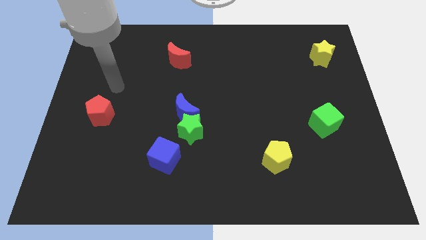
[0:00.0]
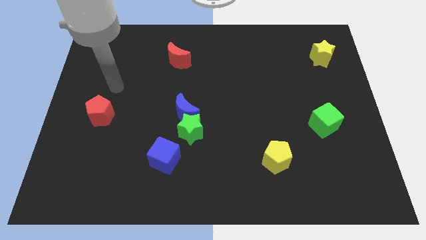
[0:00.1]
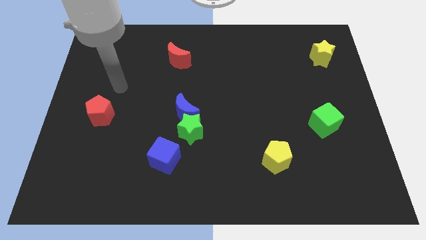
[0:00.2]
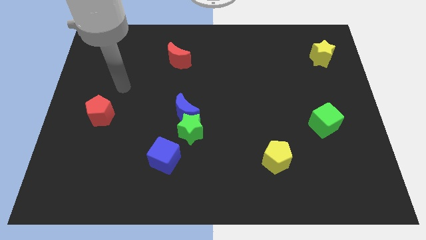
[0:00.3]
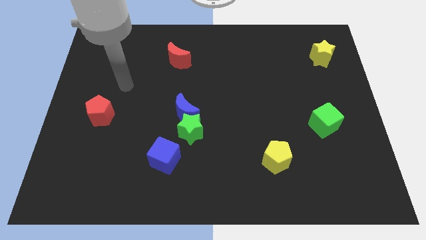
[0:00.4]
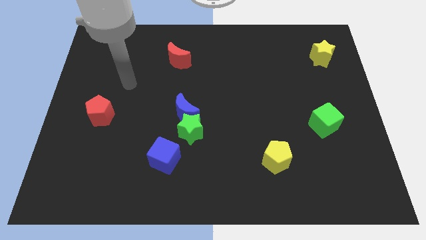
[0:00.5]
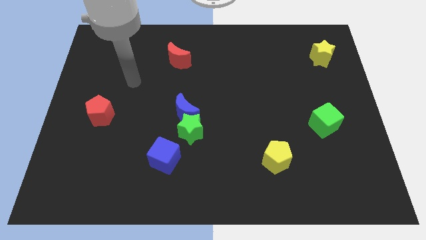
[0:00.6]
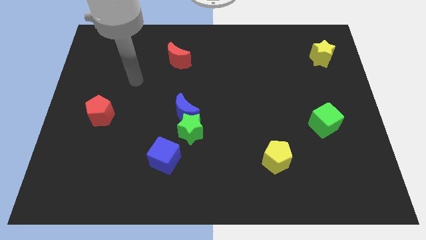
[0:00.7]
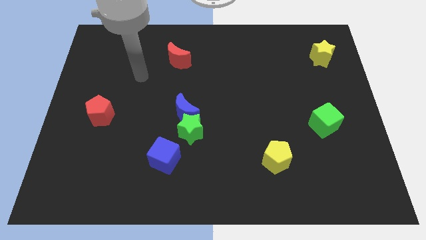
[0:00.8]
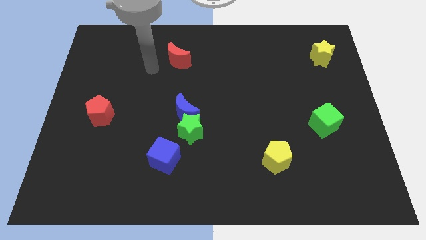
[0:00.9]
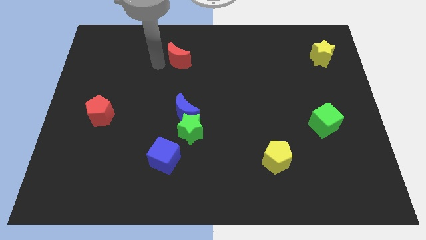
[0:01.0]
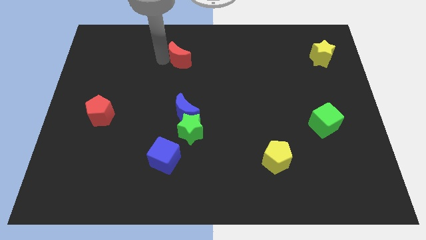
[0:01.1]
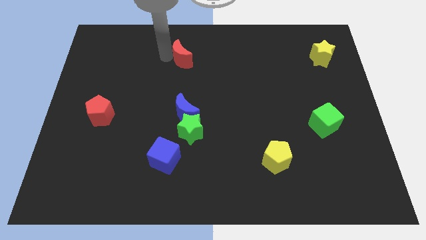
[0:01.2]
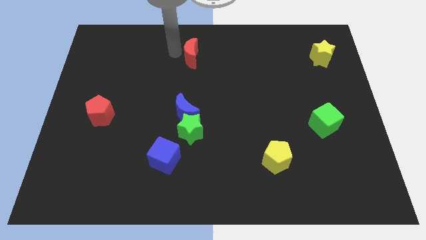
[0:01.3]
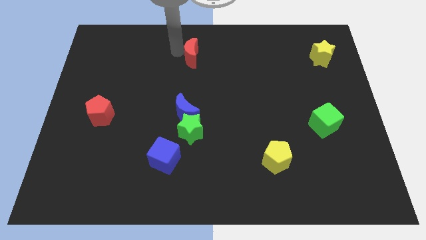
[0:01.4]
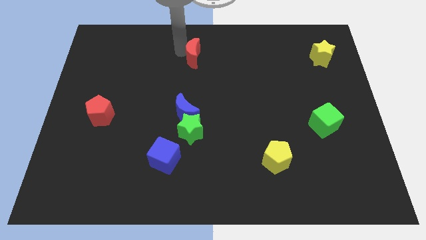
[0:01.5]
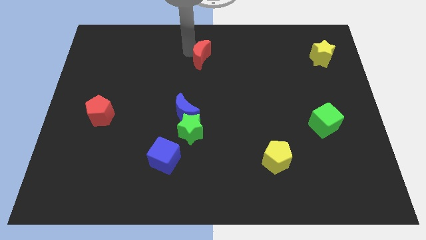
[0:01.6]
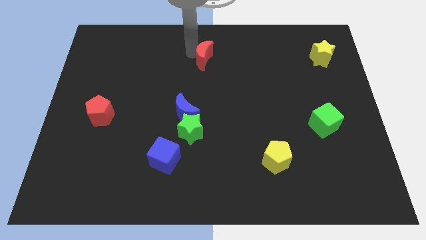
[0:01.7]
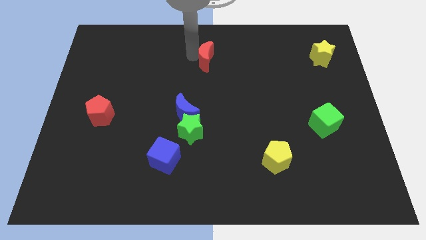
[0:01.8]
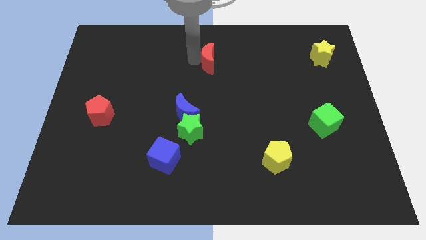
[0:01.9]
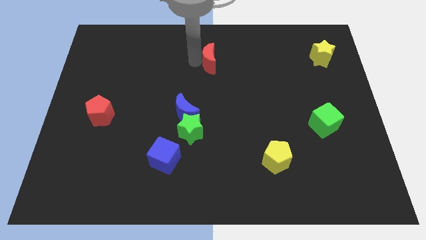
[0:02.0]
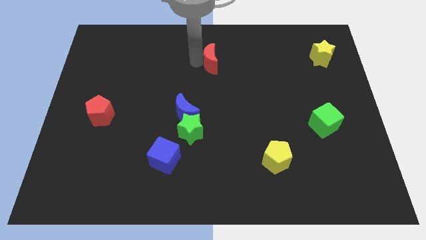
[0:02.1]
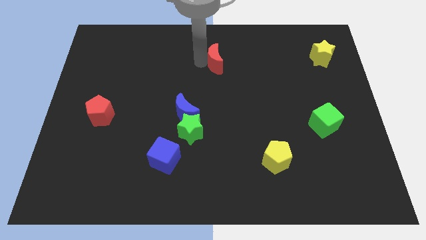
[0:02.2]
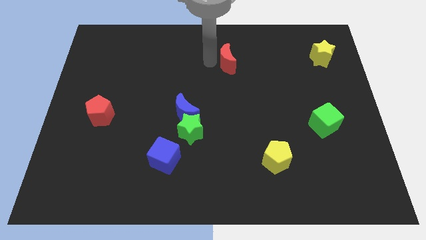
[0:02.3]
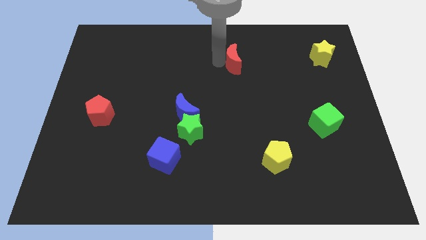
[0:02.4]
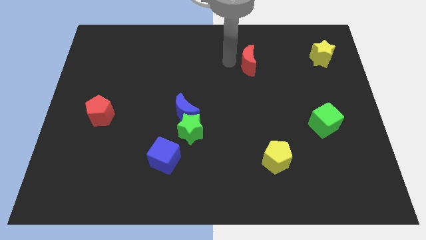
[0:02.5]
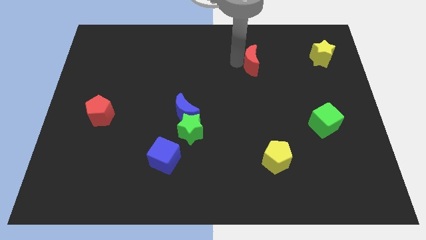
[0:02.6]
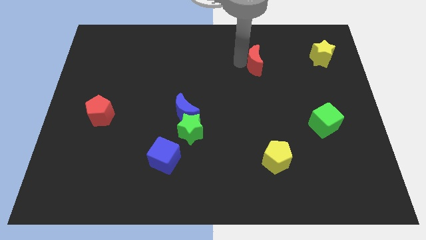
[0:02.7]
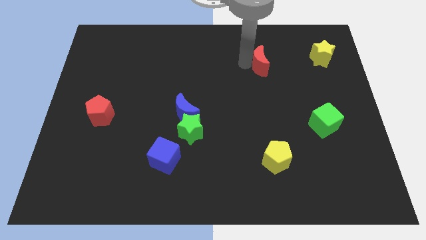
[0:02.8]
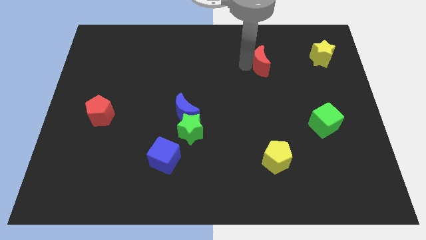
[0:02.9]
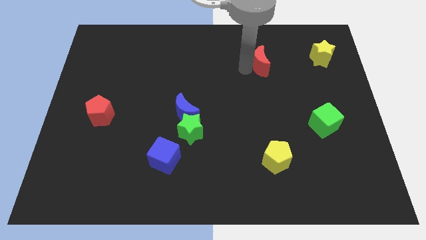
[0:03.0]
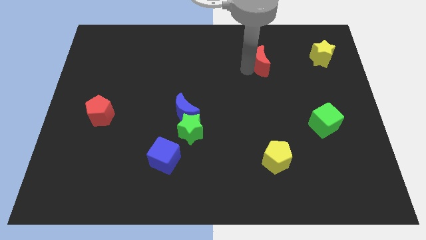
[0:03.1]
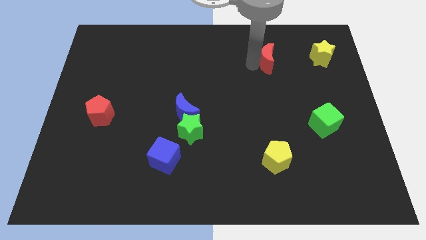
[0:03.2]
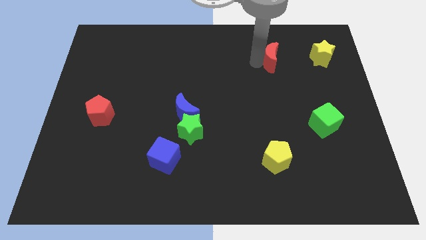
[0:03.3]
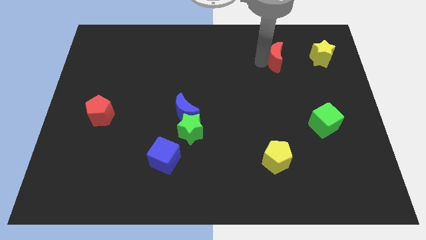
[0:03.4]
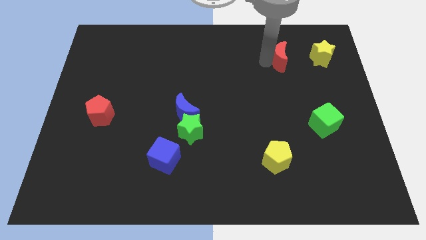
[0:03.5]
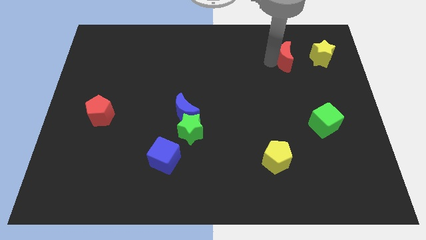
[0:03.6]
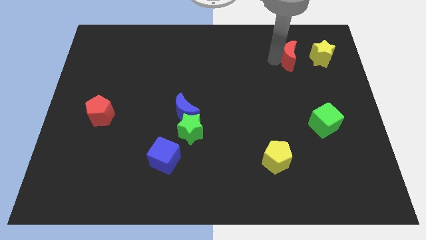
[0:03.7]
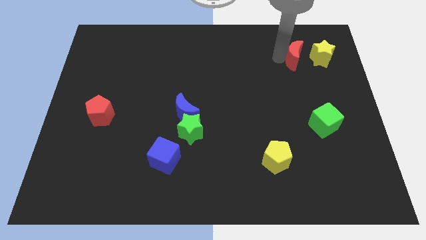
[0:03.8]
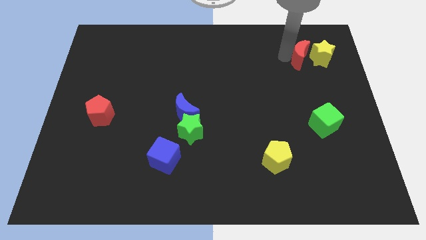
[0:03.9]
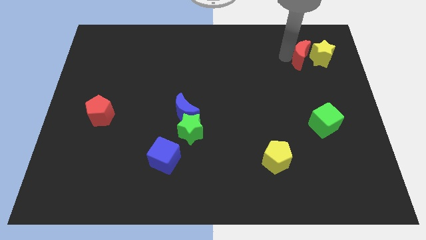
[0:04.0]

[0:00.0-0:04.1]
push the red crescent towards the yellow star

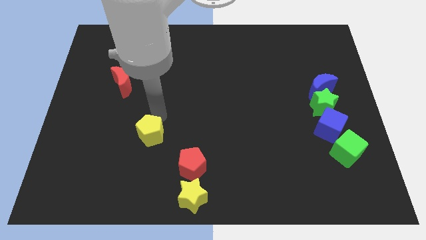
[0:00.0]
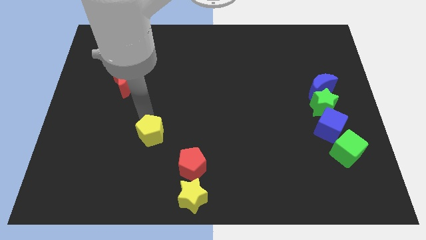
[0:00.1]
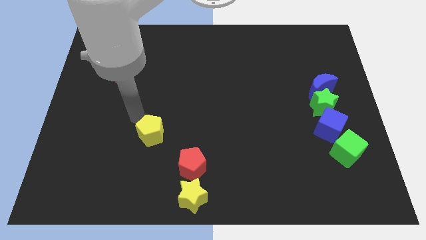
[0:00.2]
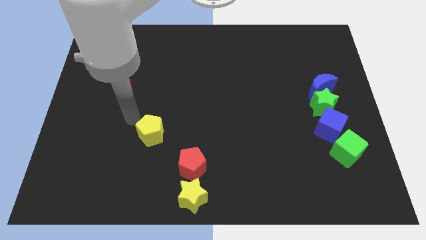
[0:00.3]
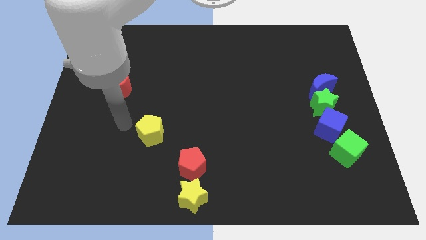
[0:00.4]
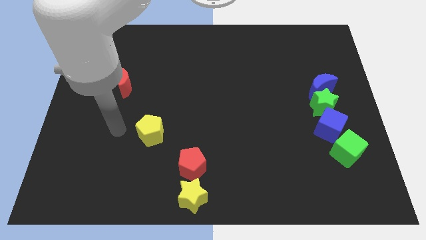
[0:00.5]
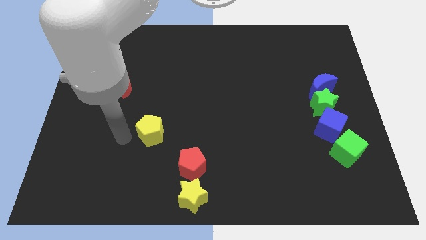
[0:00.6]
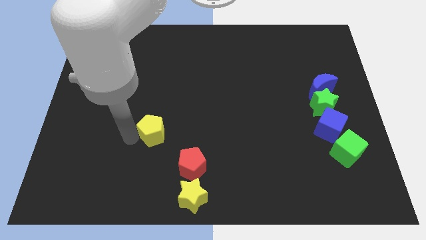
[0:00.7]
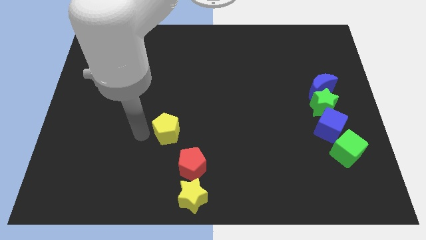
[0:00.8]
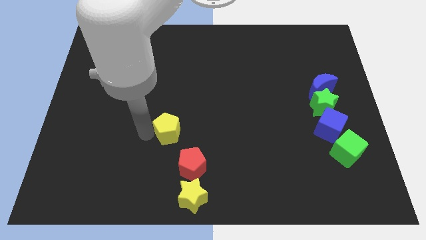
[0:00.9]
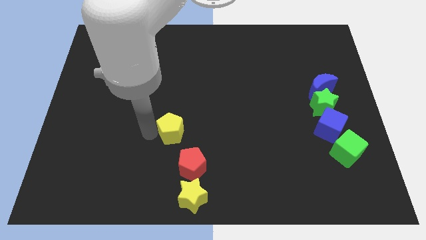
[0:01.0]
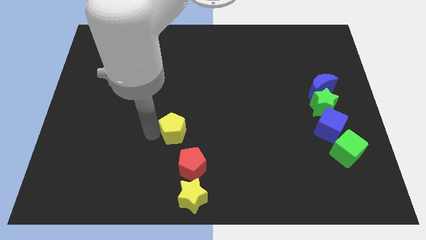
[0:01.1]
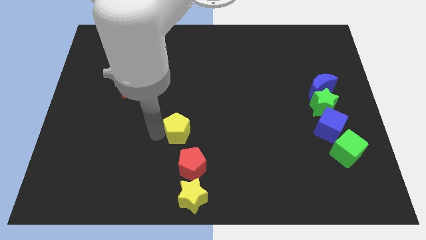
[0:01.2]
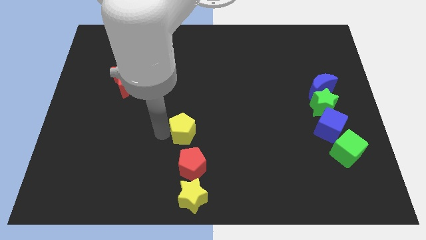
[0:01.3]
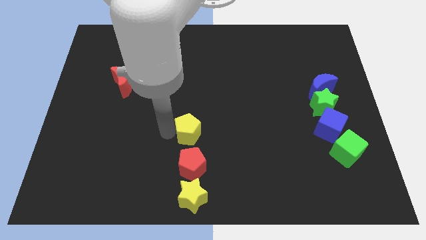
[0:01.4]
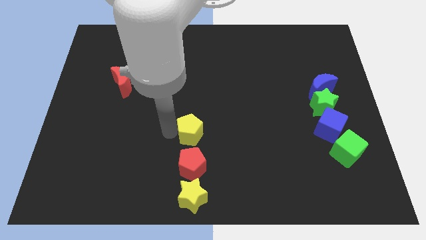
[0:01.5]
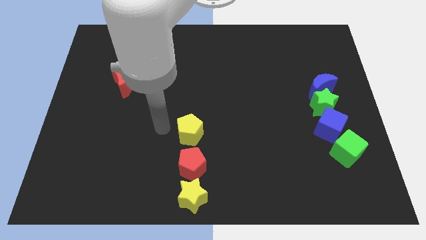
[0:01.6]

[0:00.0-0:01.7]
push the yellow pentagon to the top of the red pentagon

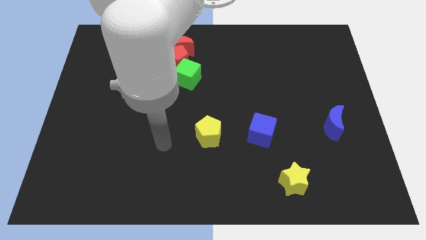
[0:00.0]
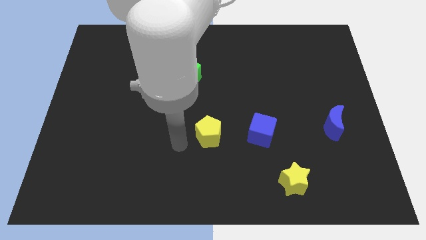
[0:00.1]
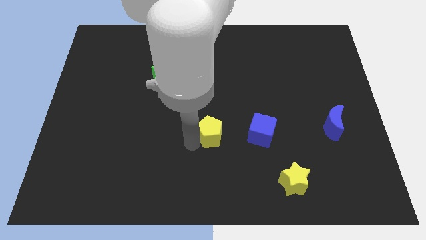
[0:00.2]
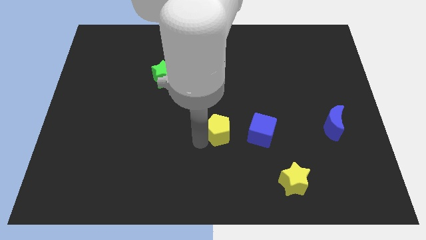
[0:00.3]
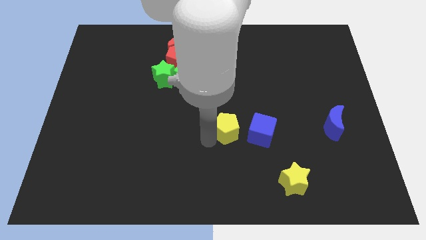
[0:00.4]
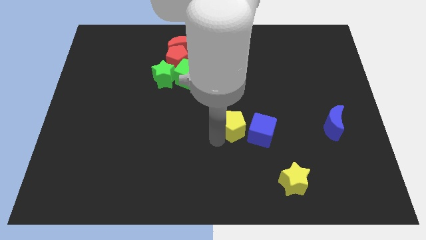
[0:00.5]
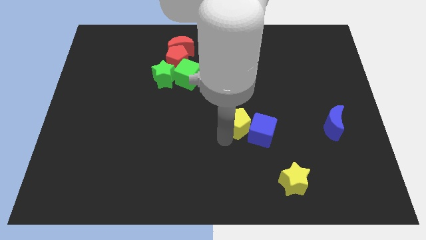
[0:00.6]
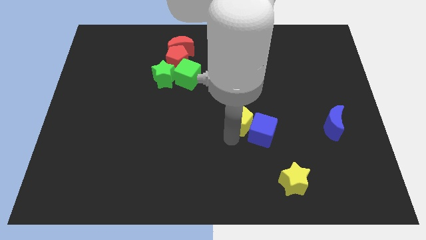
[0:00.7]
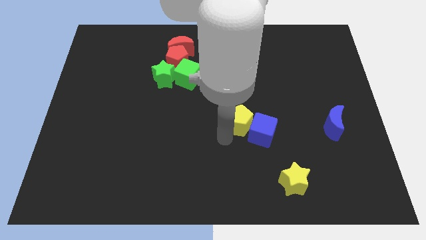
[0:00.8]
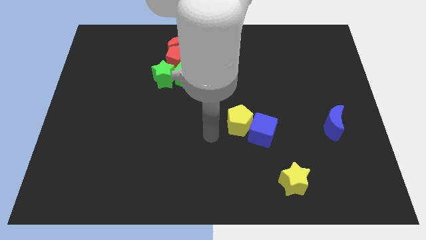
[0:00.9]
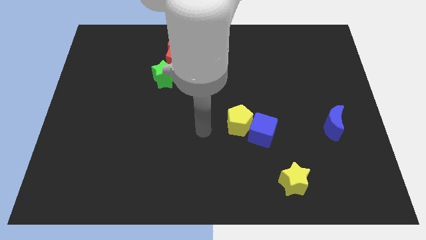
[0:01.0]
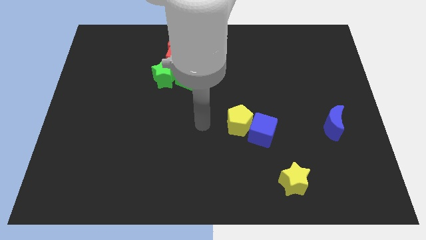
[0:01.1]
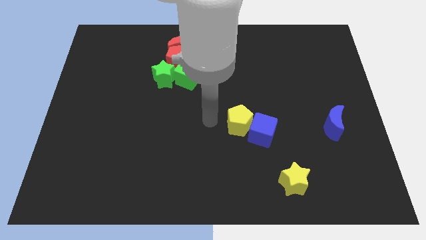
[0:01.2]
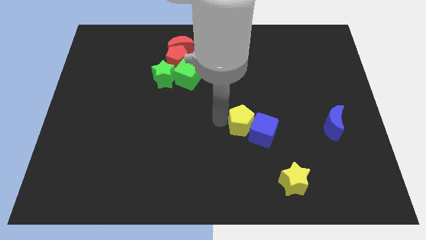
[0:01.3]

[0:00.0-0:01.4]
move the yellow pentagon to the left of the blue cube

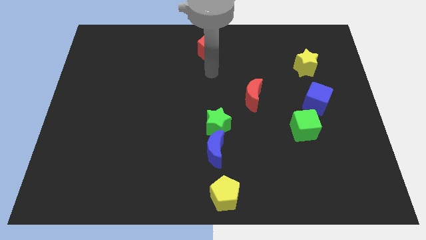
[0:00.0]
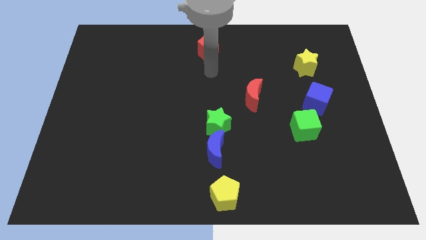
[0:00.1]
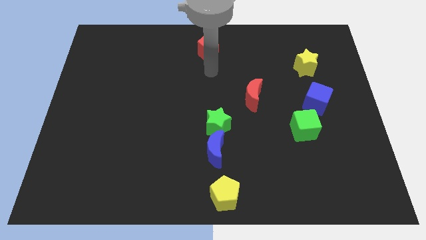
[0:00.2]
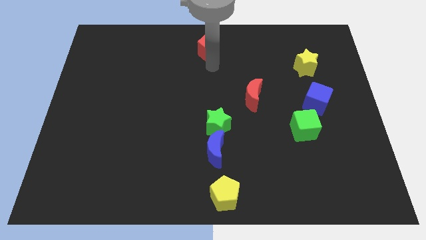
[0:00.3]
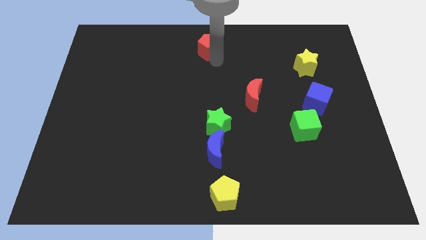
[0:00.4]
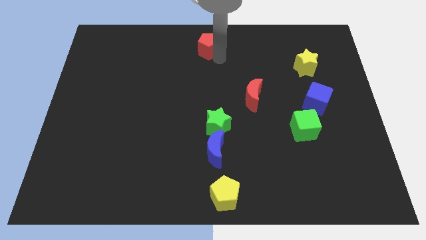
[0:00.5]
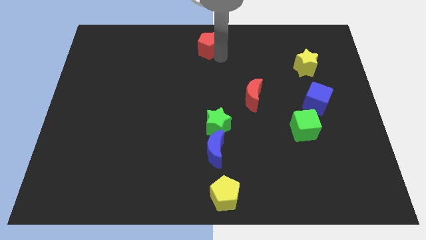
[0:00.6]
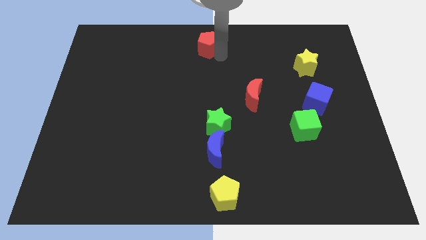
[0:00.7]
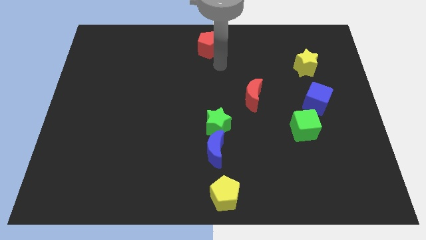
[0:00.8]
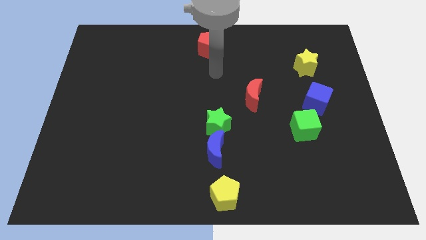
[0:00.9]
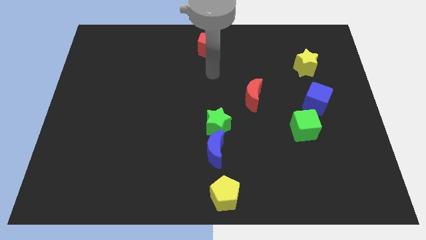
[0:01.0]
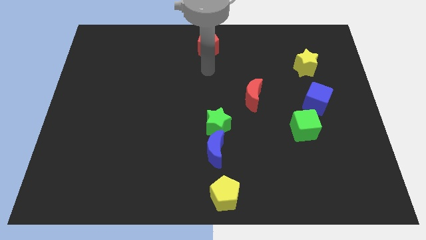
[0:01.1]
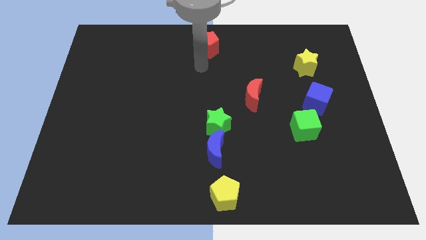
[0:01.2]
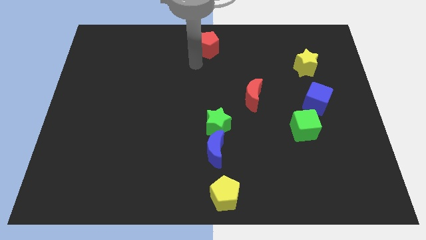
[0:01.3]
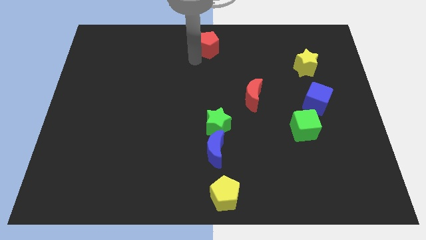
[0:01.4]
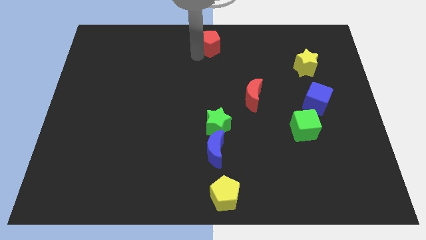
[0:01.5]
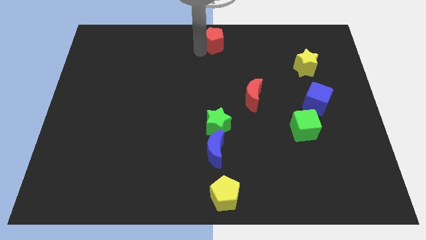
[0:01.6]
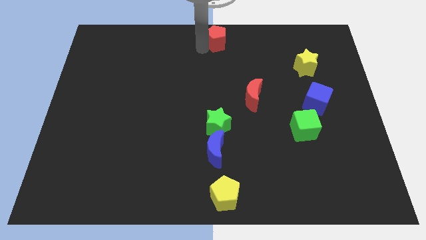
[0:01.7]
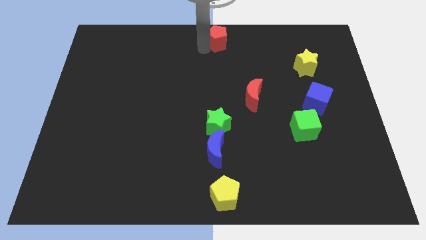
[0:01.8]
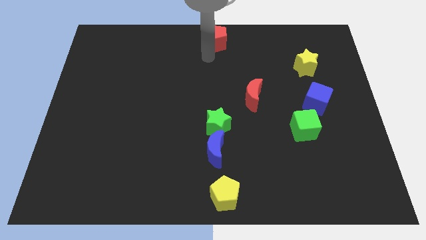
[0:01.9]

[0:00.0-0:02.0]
move your arm towards the red pentagon
